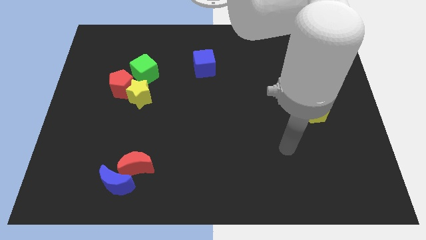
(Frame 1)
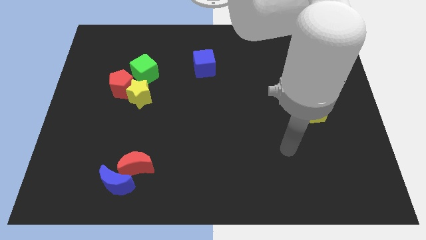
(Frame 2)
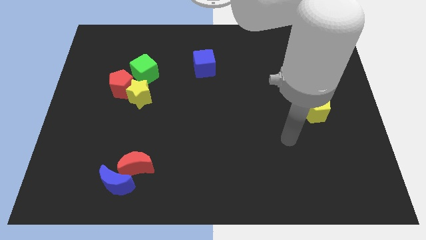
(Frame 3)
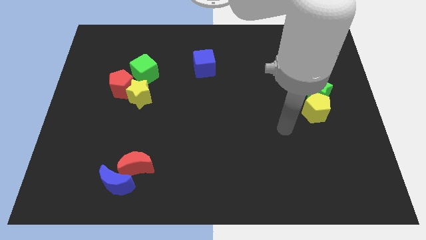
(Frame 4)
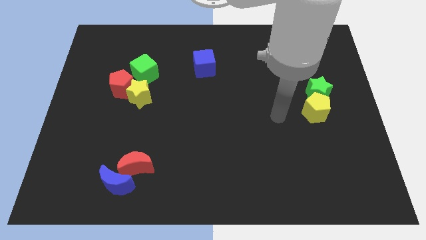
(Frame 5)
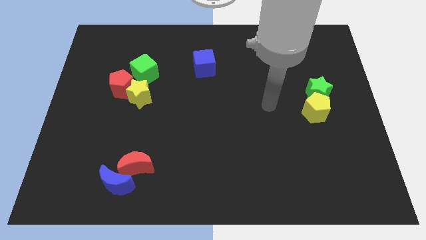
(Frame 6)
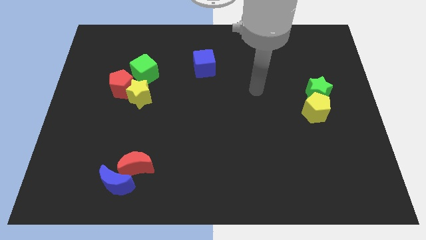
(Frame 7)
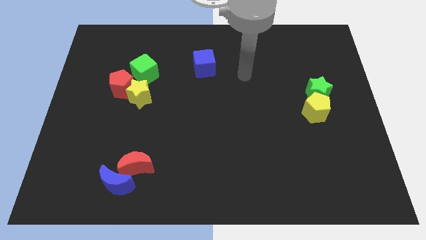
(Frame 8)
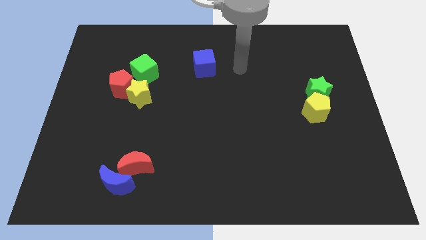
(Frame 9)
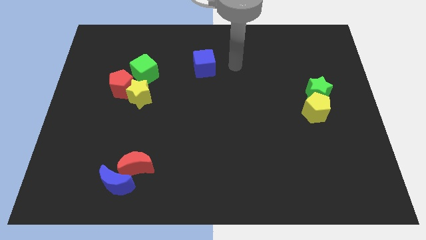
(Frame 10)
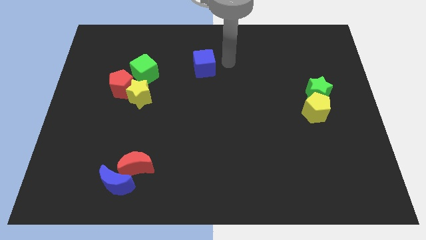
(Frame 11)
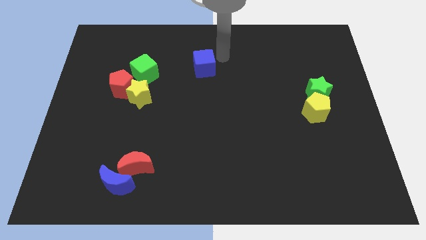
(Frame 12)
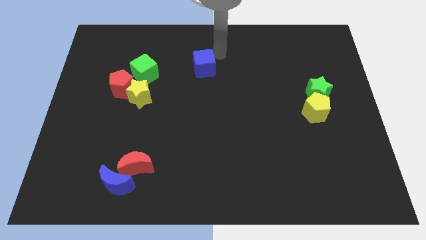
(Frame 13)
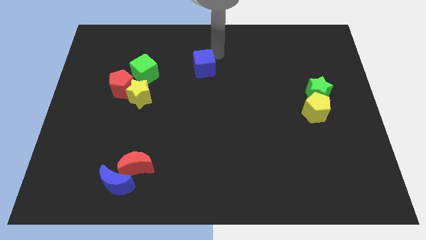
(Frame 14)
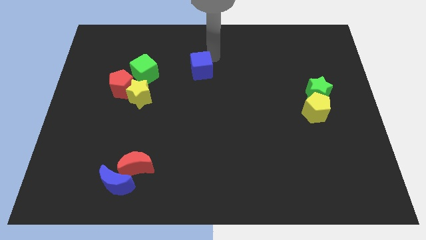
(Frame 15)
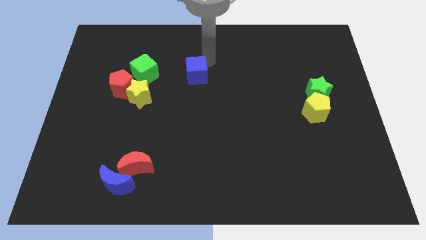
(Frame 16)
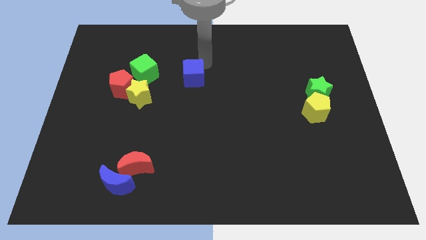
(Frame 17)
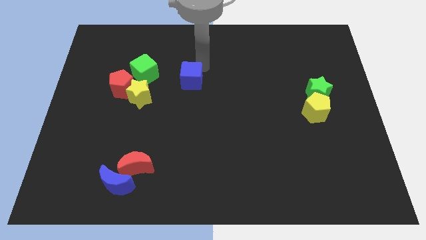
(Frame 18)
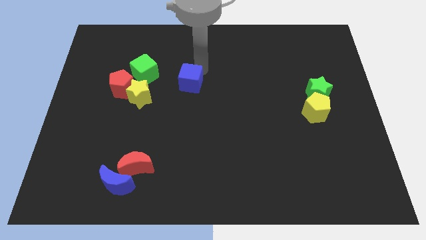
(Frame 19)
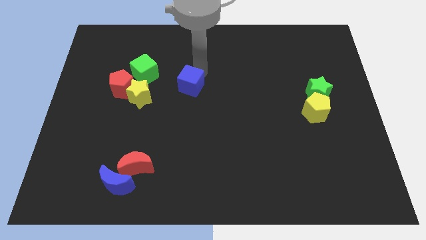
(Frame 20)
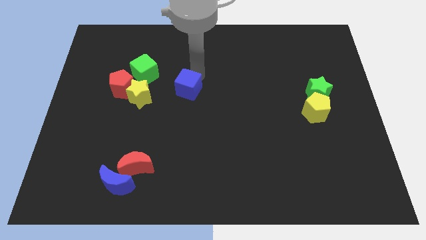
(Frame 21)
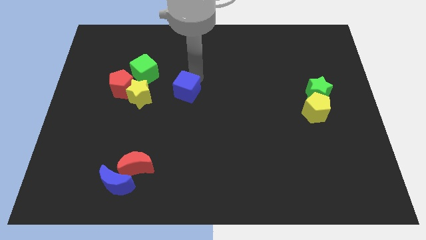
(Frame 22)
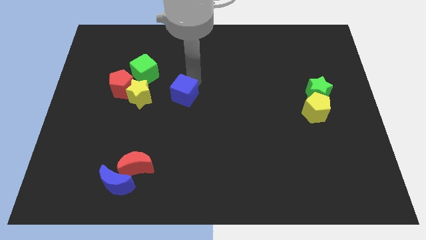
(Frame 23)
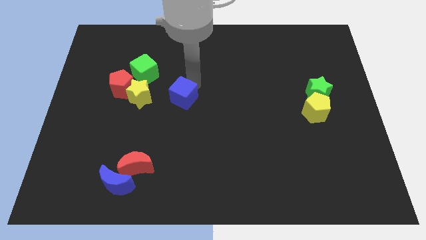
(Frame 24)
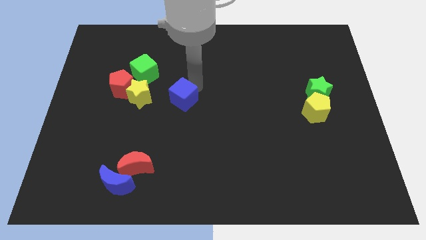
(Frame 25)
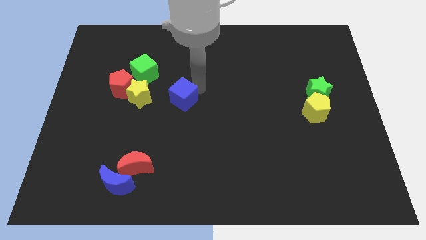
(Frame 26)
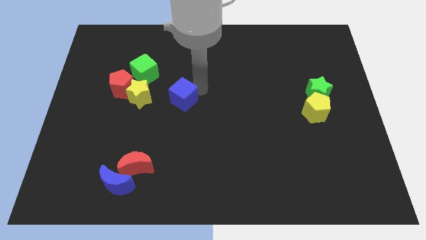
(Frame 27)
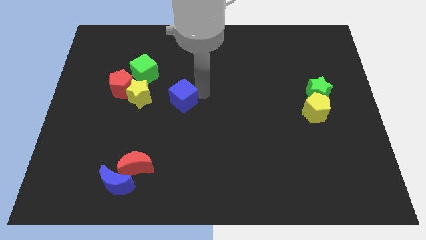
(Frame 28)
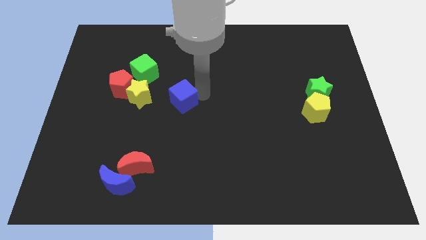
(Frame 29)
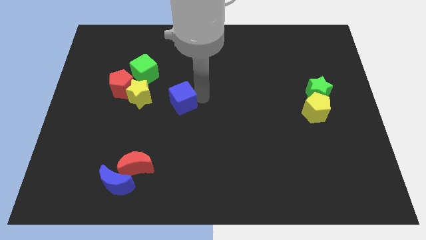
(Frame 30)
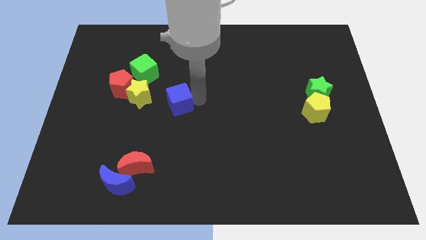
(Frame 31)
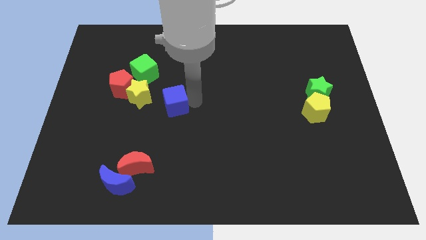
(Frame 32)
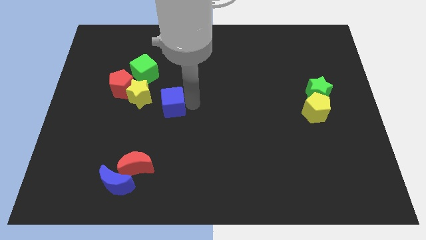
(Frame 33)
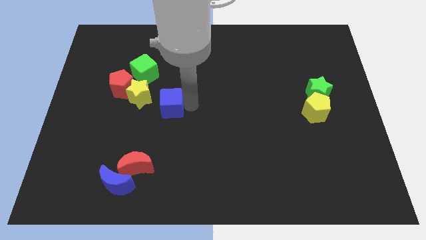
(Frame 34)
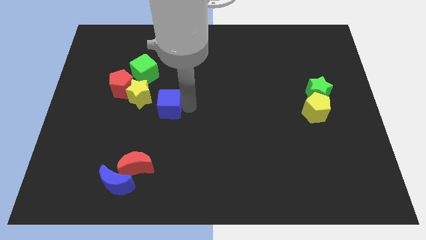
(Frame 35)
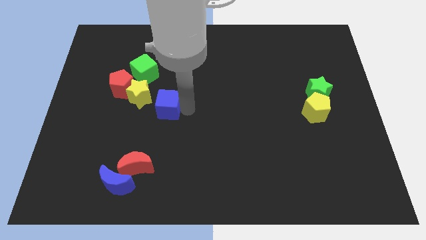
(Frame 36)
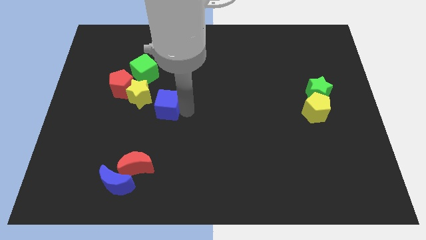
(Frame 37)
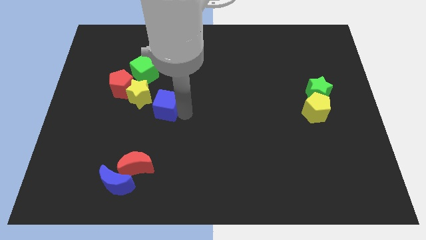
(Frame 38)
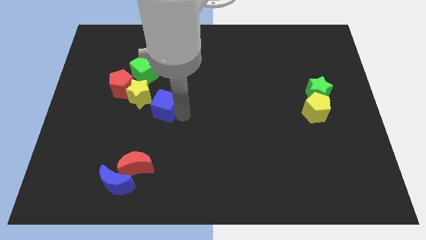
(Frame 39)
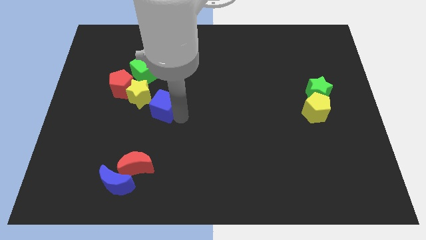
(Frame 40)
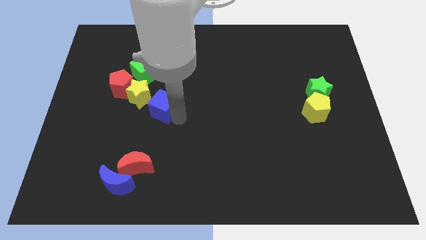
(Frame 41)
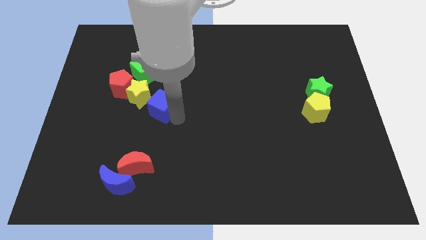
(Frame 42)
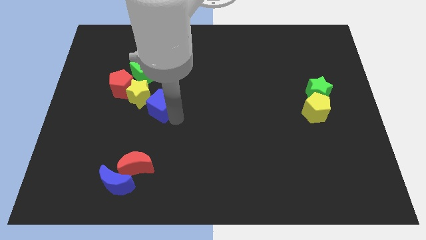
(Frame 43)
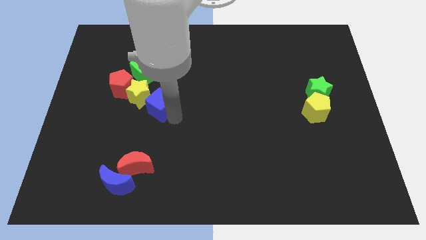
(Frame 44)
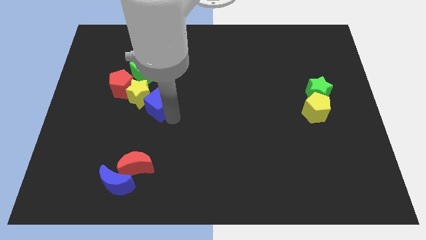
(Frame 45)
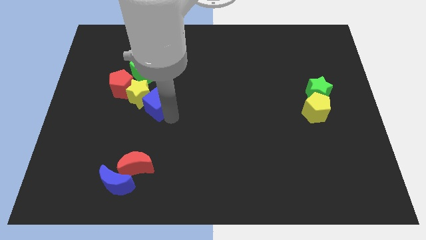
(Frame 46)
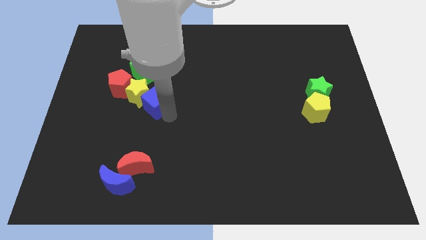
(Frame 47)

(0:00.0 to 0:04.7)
push the blue cube next to the yellow star

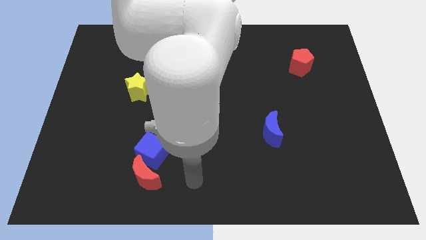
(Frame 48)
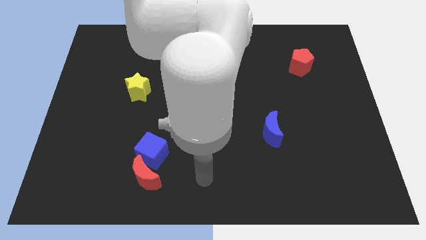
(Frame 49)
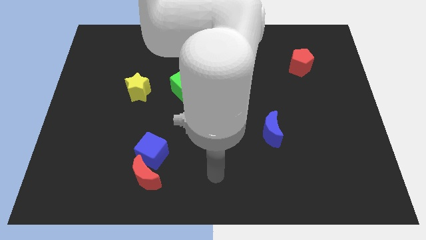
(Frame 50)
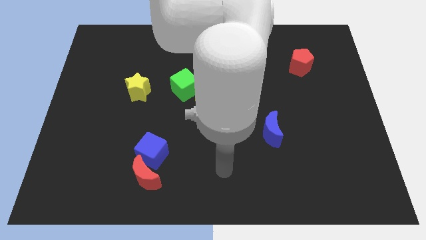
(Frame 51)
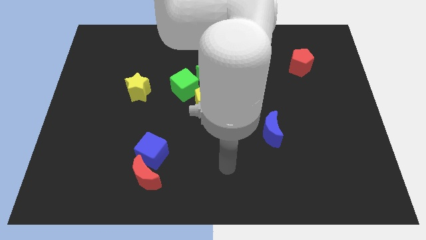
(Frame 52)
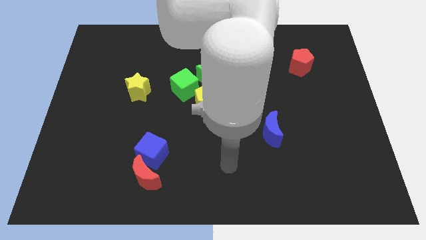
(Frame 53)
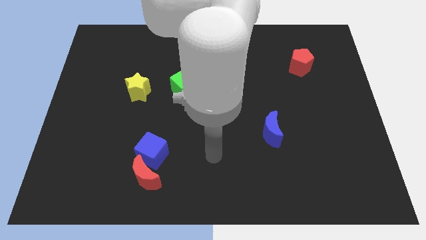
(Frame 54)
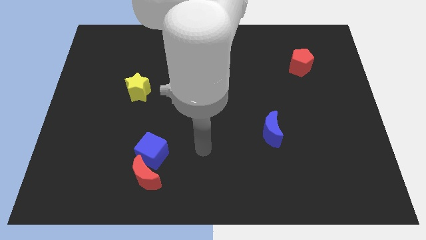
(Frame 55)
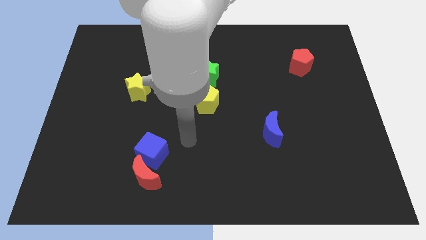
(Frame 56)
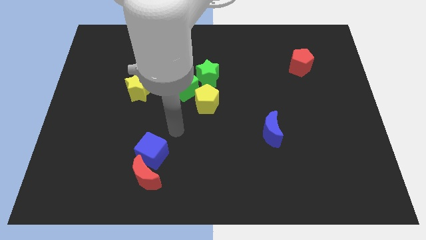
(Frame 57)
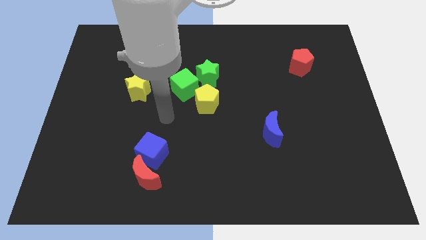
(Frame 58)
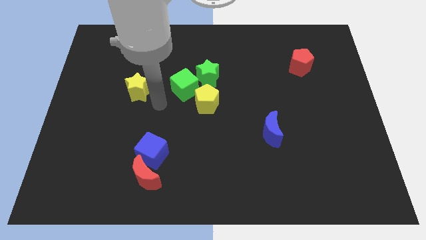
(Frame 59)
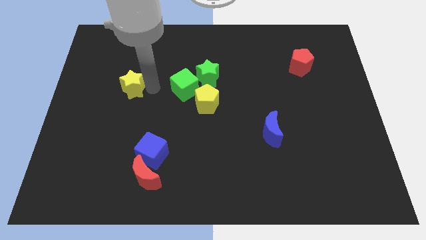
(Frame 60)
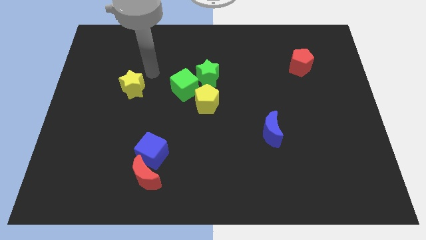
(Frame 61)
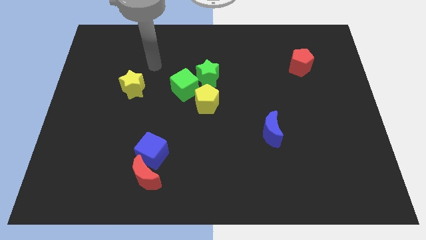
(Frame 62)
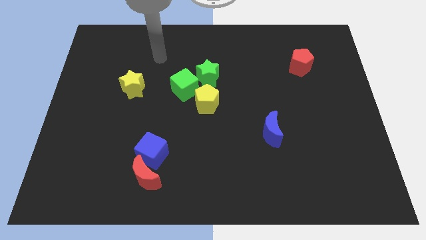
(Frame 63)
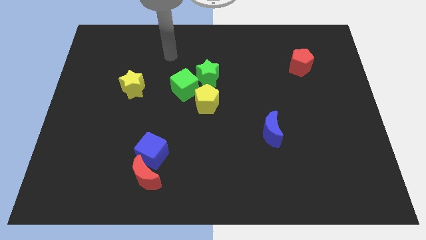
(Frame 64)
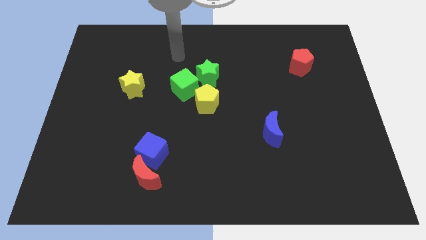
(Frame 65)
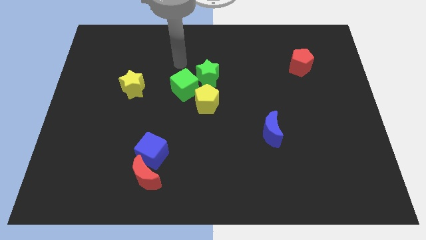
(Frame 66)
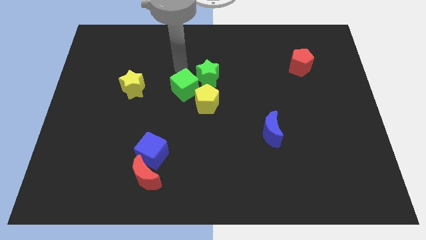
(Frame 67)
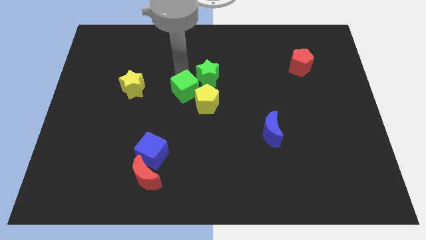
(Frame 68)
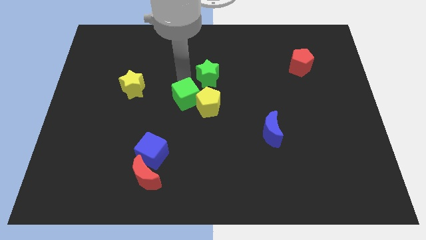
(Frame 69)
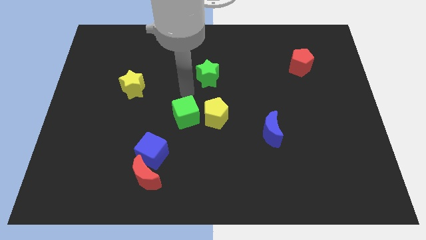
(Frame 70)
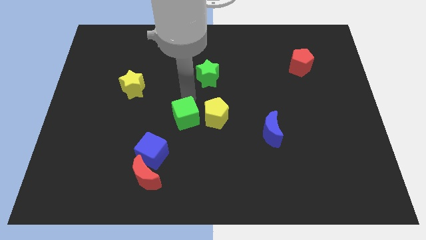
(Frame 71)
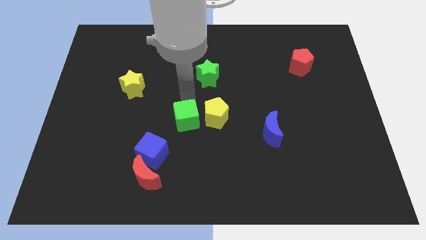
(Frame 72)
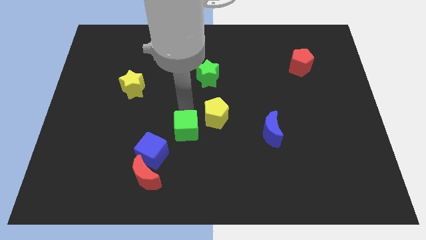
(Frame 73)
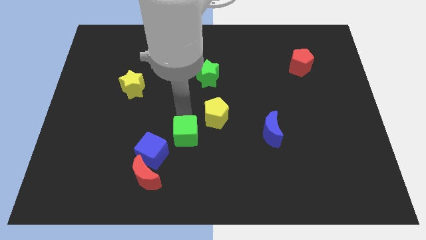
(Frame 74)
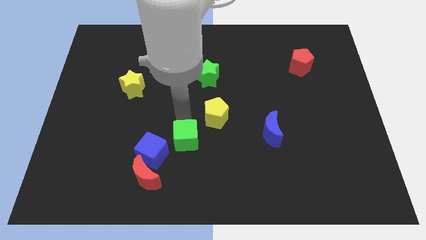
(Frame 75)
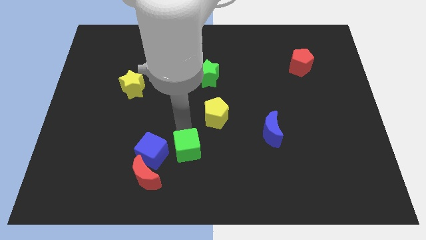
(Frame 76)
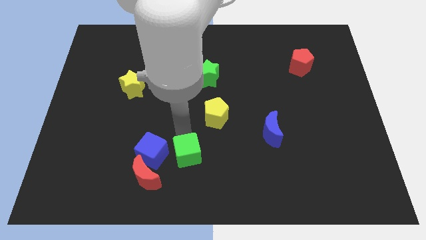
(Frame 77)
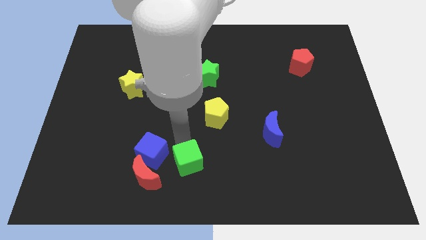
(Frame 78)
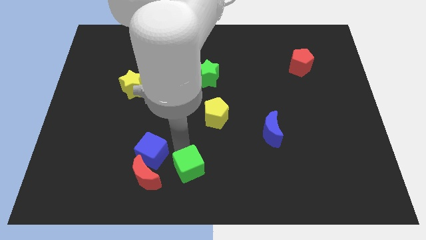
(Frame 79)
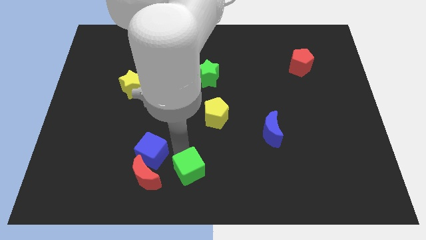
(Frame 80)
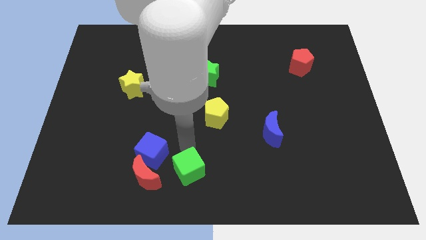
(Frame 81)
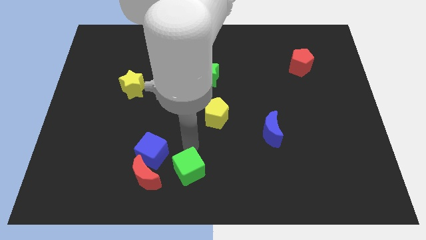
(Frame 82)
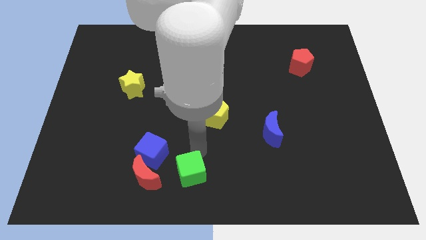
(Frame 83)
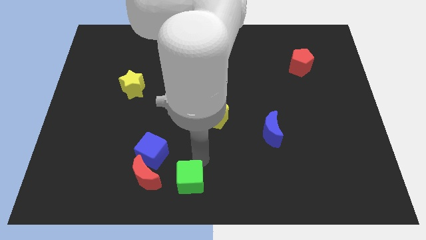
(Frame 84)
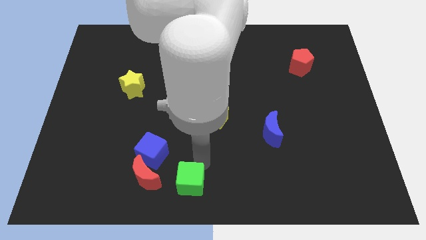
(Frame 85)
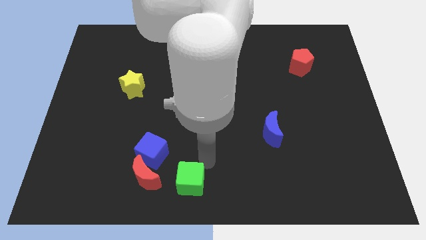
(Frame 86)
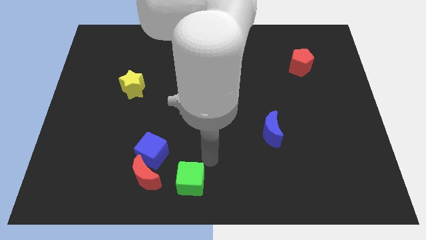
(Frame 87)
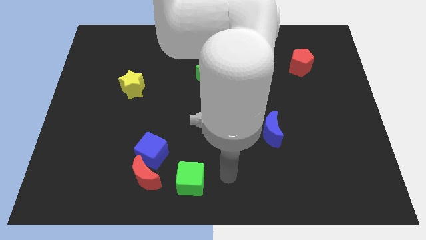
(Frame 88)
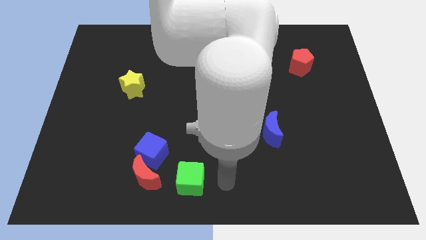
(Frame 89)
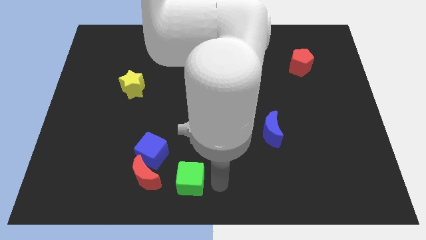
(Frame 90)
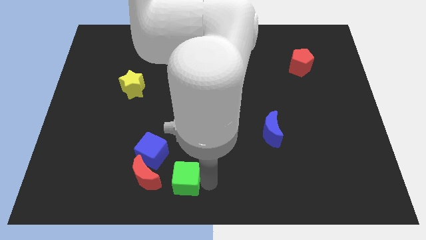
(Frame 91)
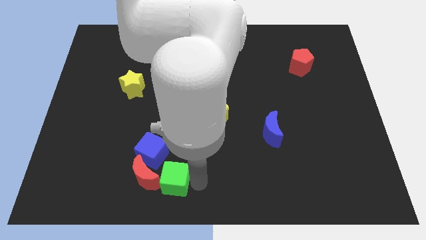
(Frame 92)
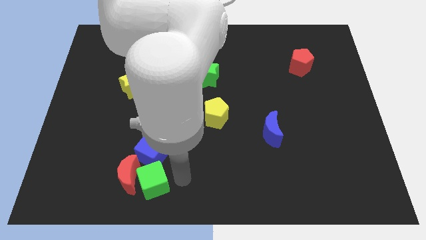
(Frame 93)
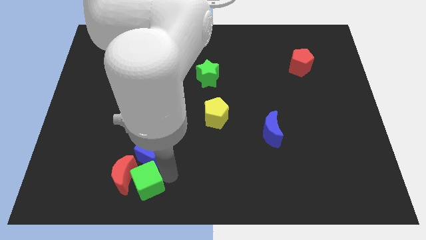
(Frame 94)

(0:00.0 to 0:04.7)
put the green cube to the red moon
